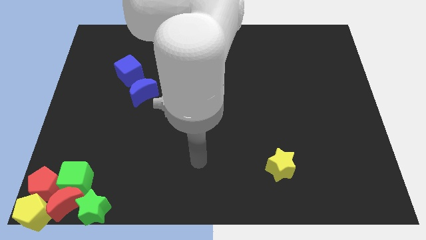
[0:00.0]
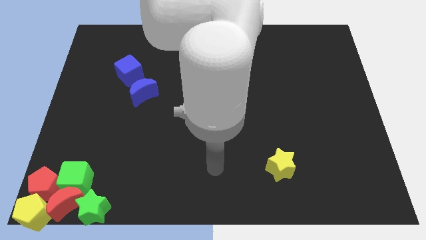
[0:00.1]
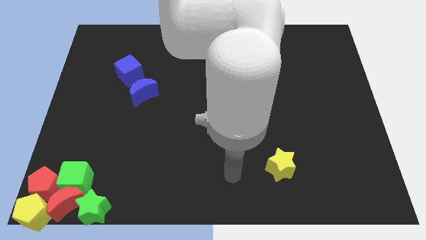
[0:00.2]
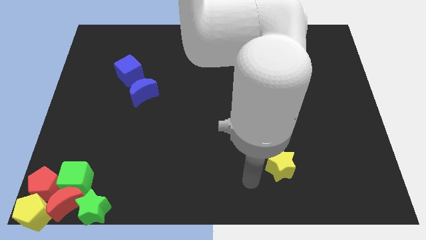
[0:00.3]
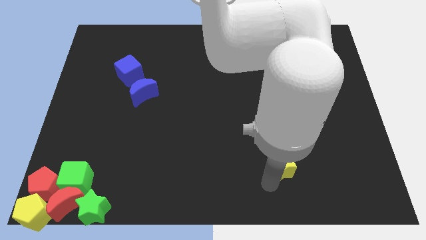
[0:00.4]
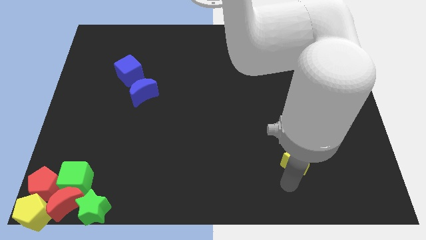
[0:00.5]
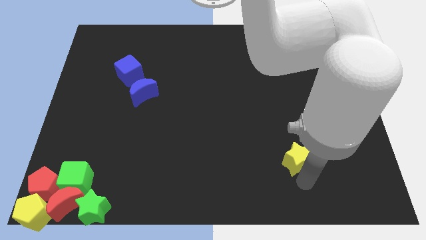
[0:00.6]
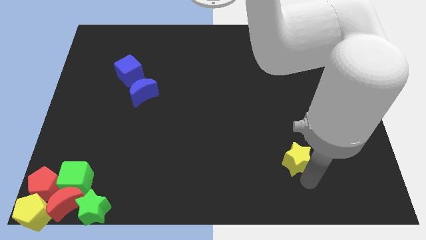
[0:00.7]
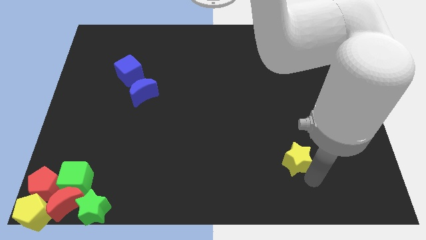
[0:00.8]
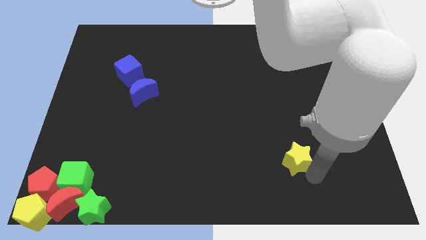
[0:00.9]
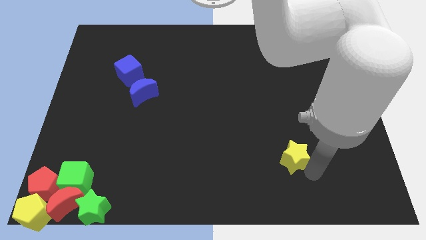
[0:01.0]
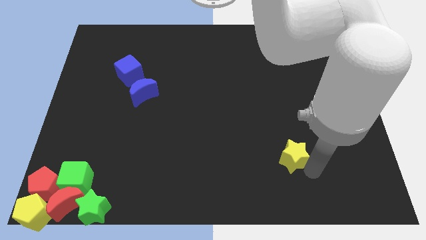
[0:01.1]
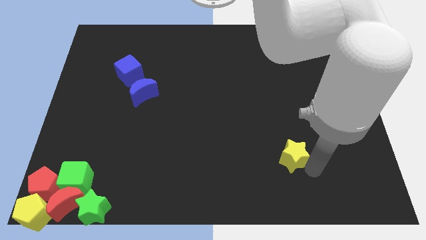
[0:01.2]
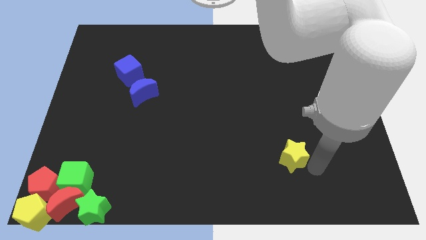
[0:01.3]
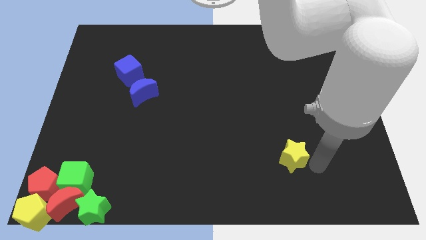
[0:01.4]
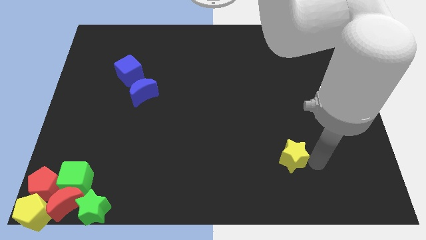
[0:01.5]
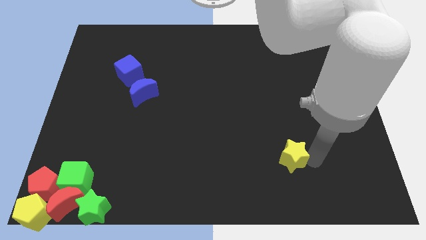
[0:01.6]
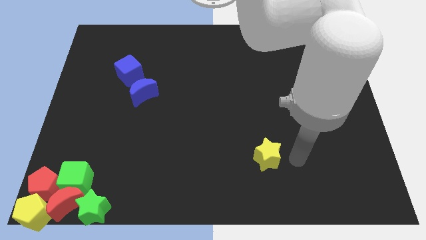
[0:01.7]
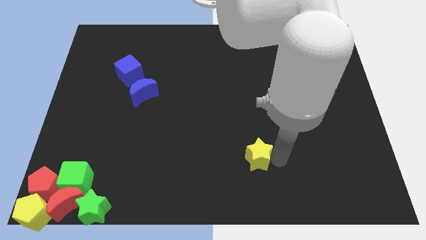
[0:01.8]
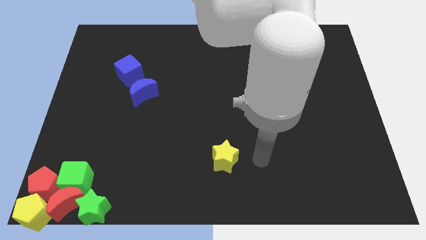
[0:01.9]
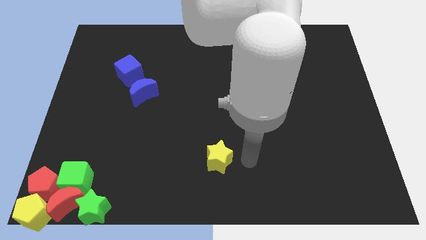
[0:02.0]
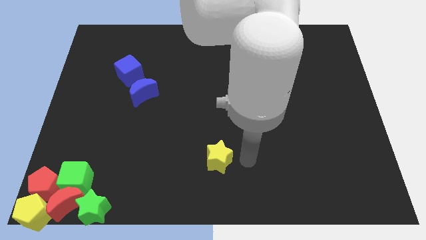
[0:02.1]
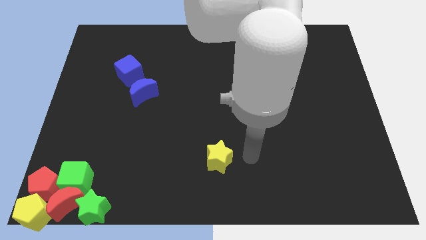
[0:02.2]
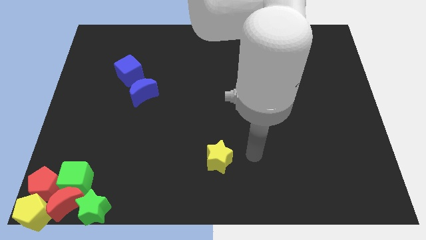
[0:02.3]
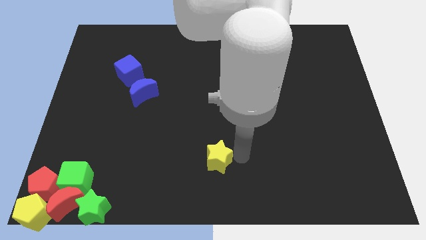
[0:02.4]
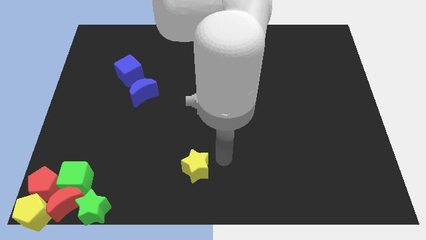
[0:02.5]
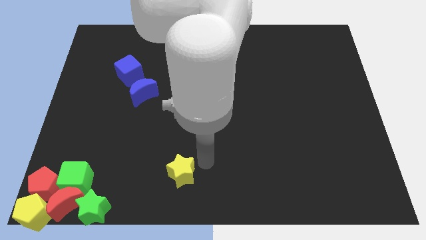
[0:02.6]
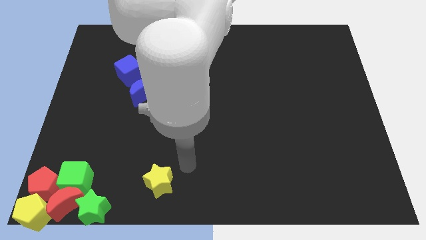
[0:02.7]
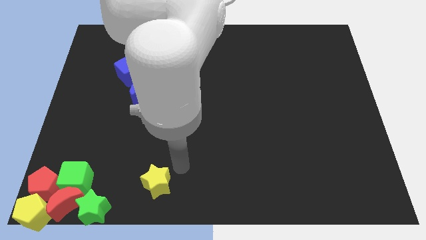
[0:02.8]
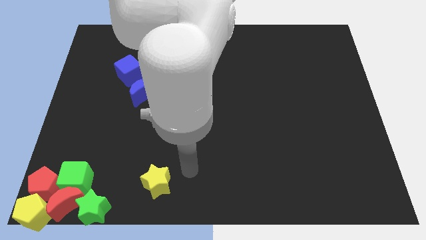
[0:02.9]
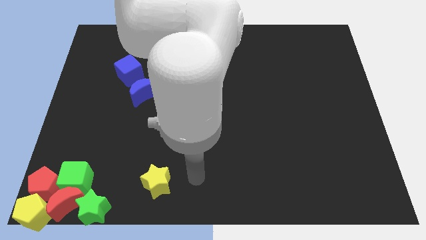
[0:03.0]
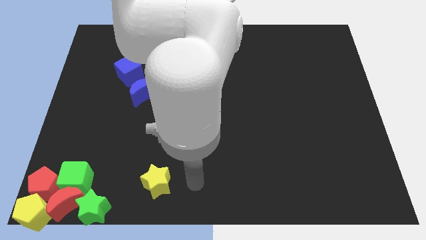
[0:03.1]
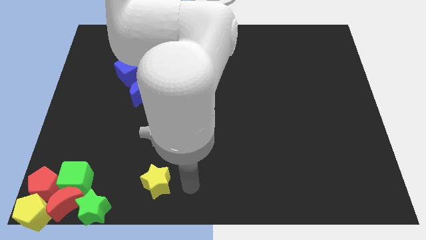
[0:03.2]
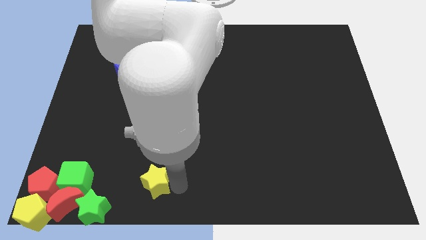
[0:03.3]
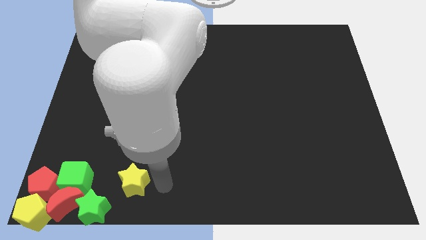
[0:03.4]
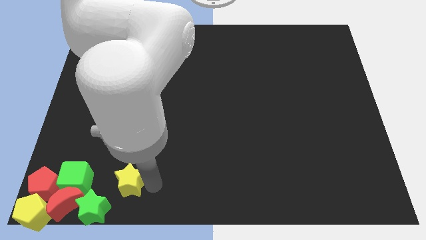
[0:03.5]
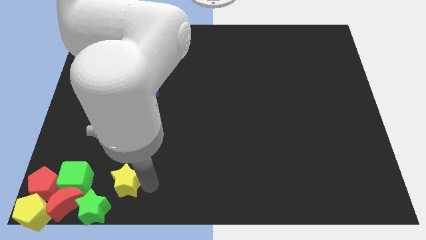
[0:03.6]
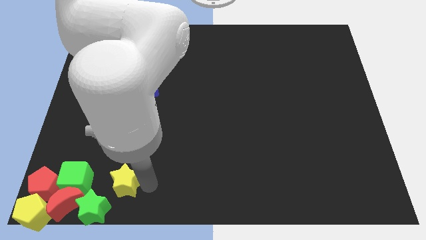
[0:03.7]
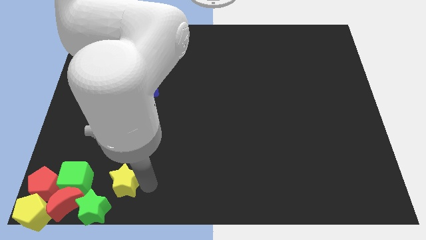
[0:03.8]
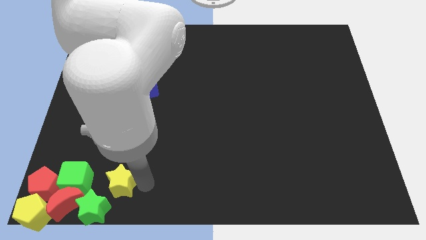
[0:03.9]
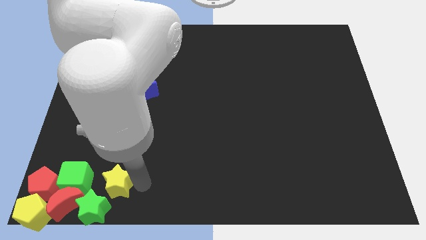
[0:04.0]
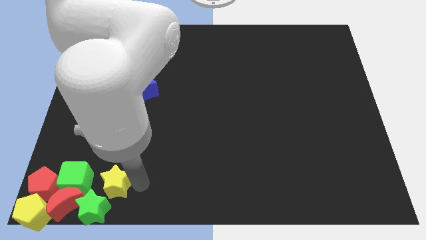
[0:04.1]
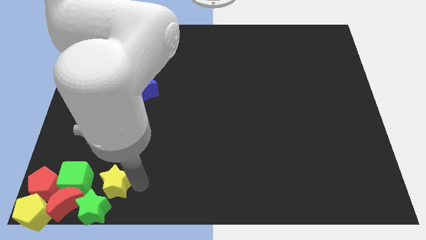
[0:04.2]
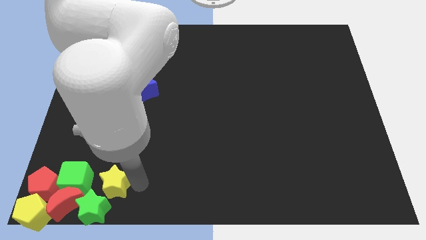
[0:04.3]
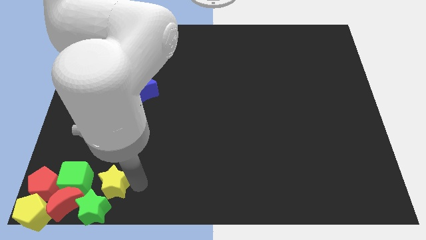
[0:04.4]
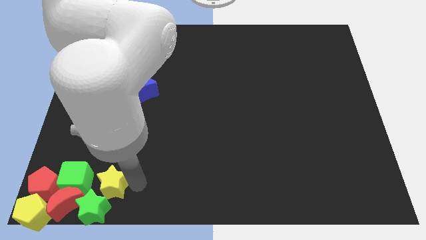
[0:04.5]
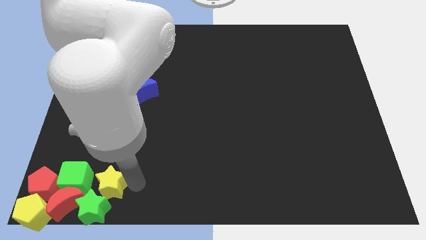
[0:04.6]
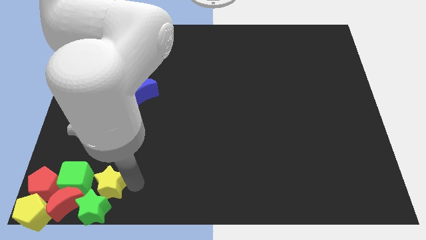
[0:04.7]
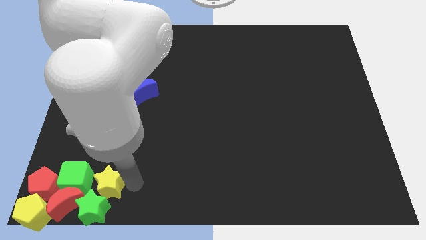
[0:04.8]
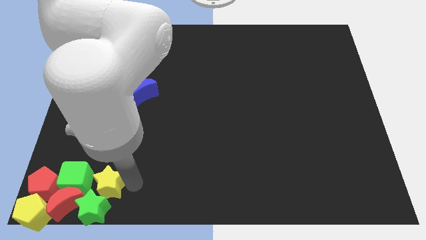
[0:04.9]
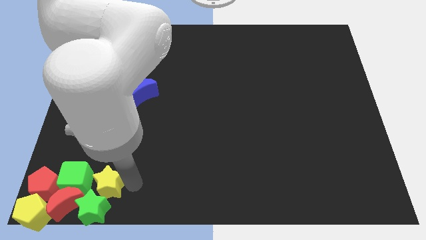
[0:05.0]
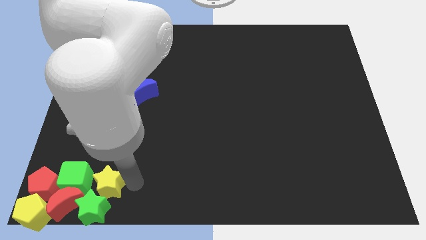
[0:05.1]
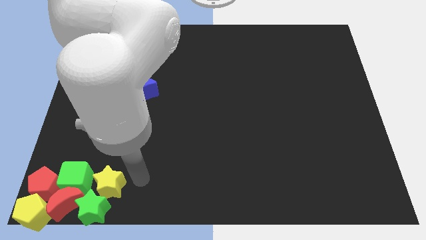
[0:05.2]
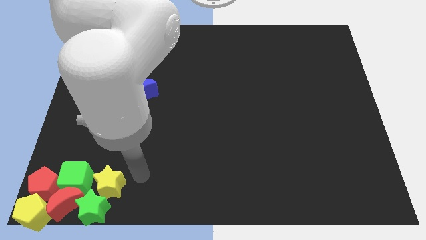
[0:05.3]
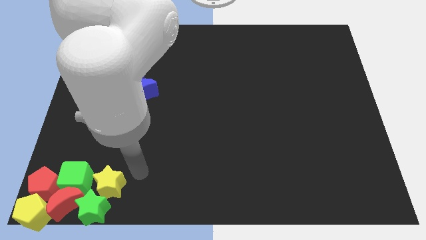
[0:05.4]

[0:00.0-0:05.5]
place the yellow star to the right of the green cube

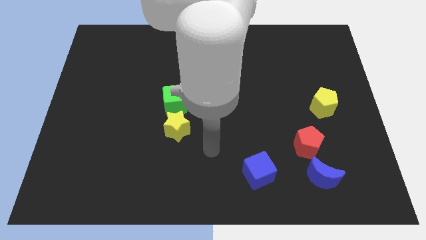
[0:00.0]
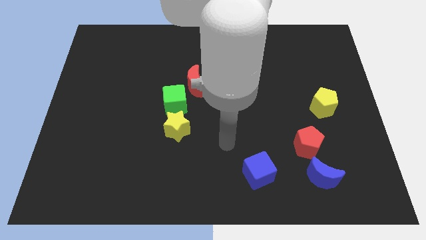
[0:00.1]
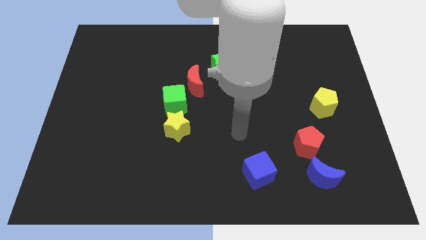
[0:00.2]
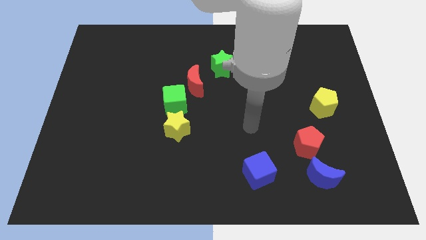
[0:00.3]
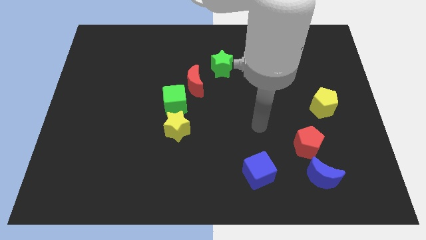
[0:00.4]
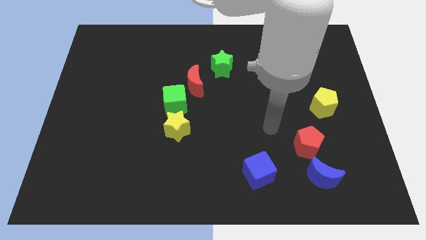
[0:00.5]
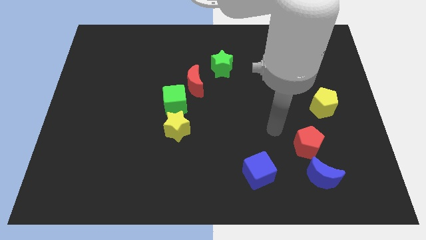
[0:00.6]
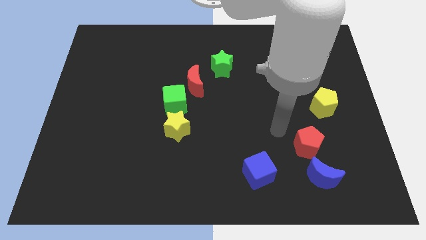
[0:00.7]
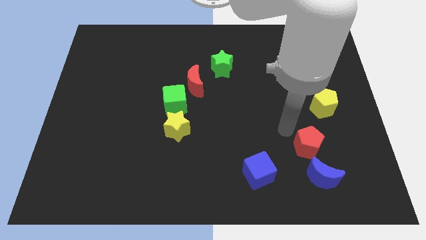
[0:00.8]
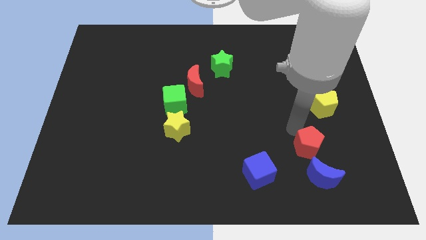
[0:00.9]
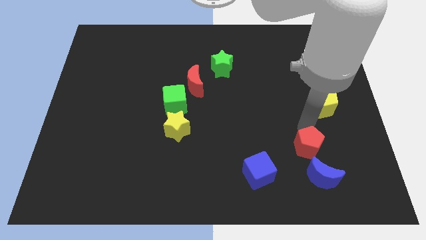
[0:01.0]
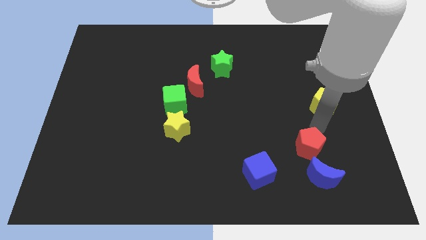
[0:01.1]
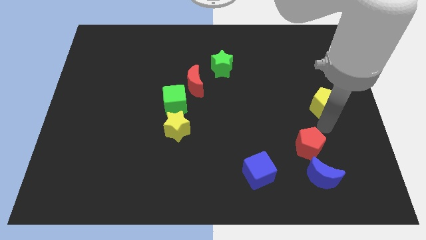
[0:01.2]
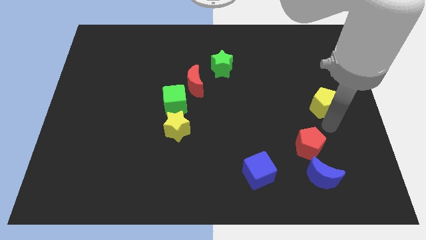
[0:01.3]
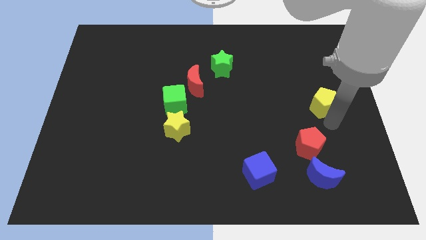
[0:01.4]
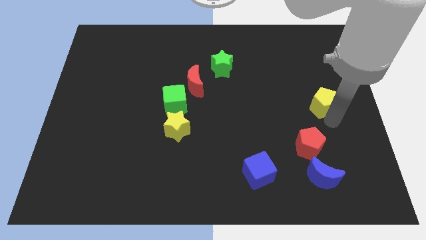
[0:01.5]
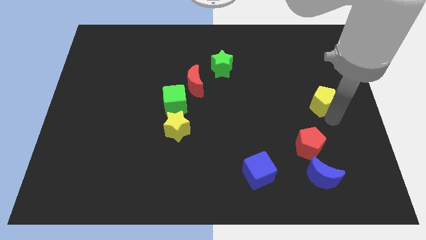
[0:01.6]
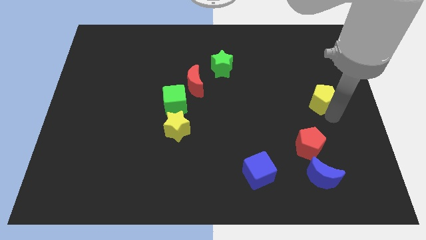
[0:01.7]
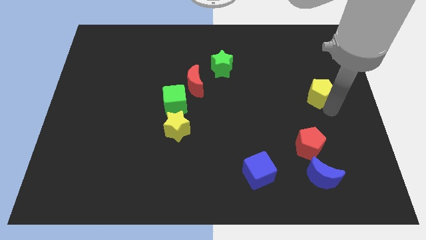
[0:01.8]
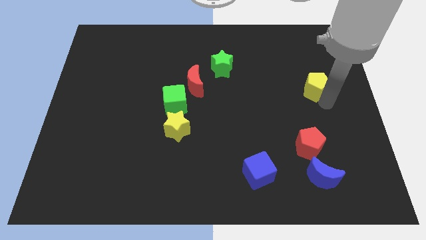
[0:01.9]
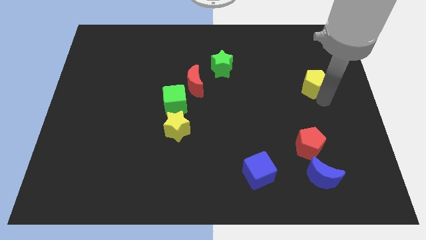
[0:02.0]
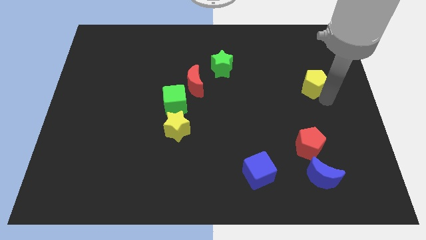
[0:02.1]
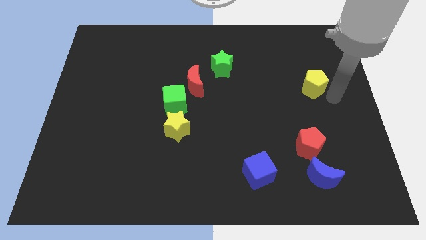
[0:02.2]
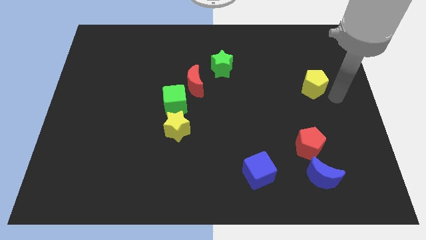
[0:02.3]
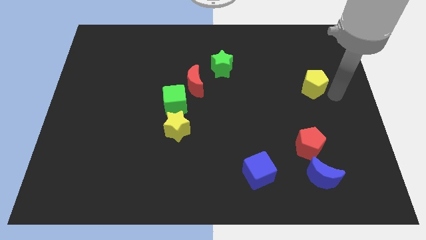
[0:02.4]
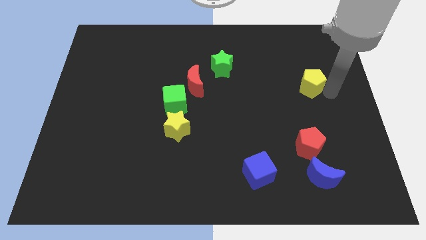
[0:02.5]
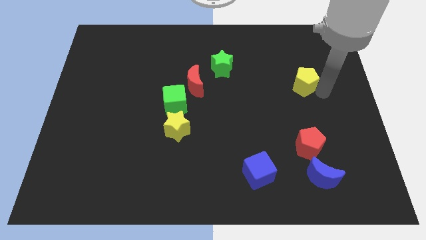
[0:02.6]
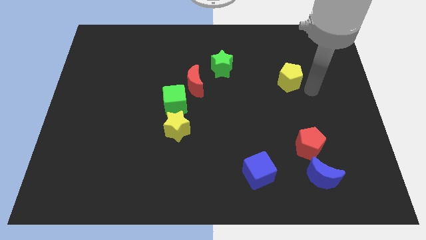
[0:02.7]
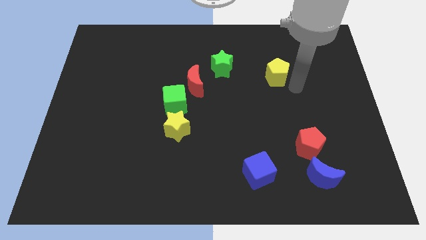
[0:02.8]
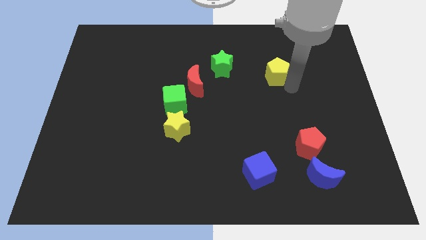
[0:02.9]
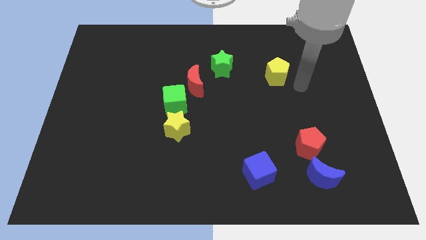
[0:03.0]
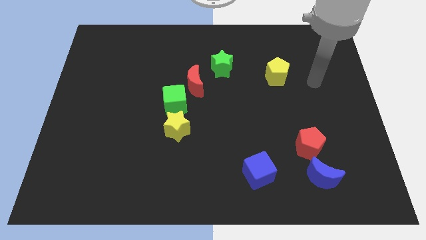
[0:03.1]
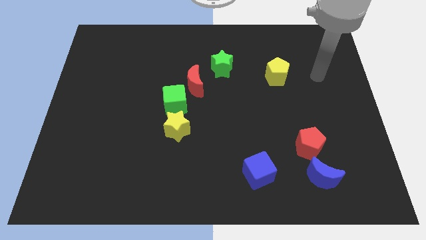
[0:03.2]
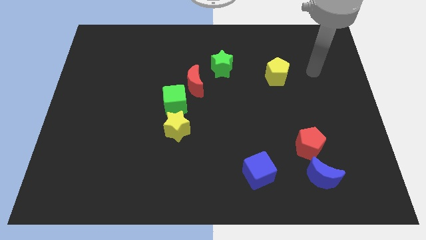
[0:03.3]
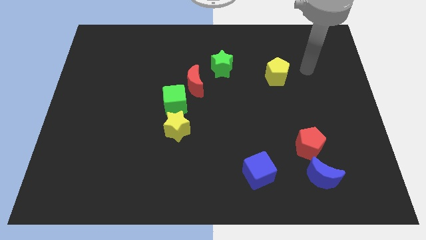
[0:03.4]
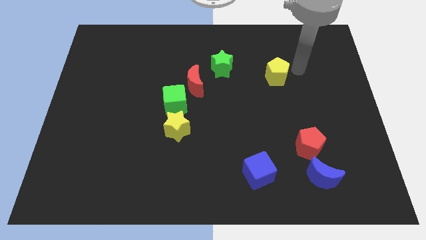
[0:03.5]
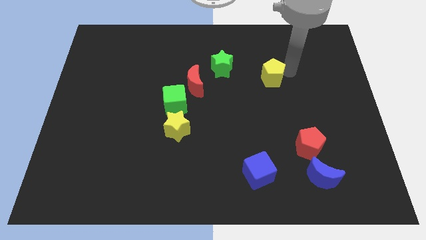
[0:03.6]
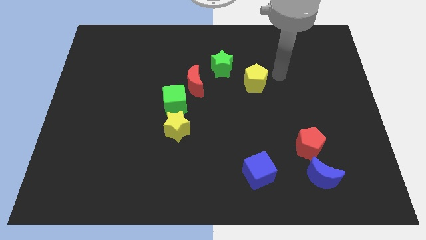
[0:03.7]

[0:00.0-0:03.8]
push the yellow pentagon to the right of red moon
